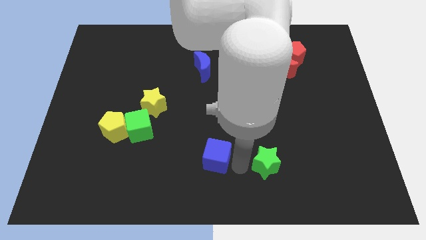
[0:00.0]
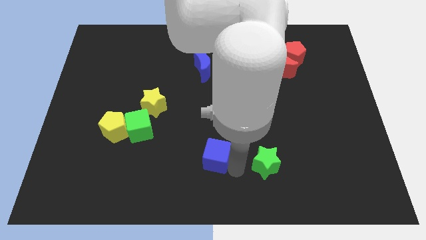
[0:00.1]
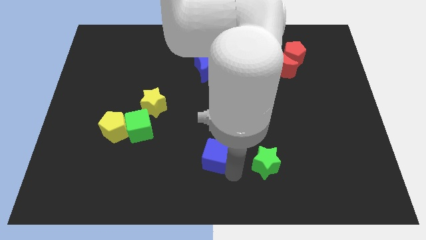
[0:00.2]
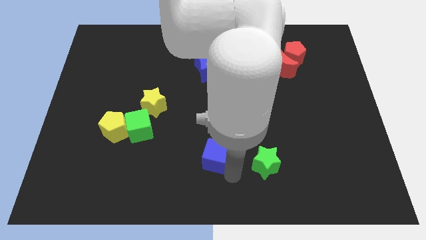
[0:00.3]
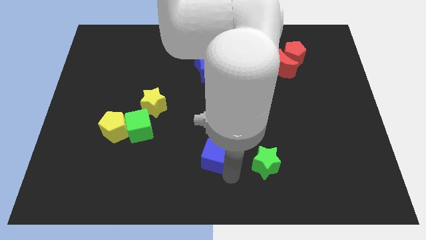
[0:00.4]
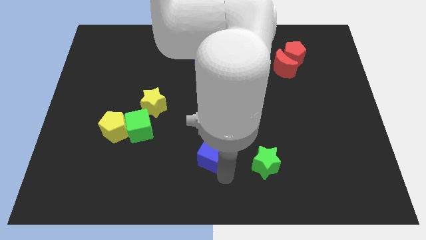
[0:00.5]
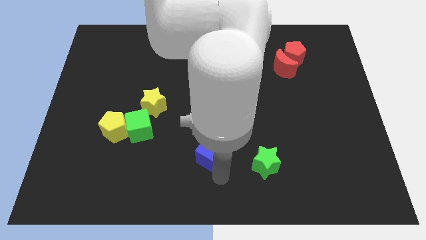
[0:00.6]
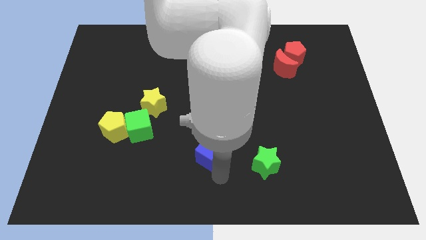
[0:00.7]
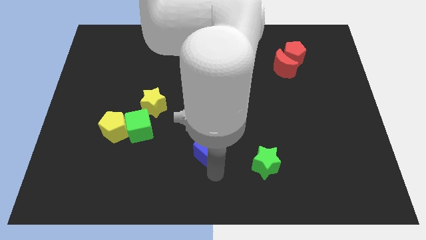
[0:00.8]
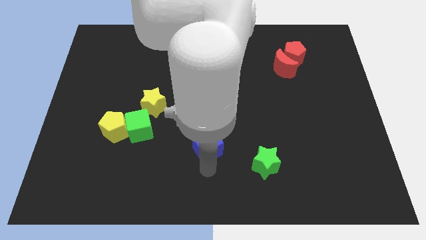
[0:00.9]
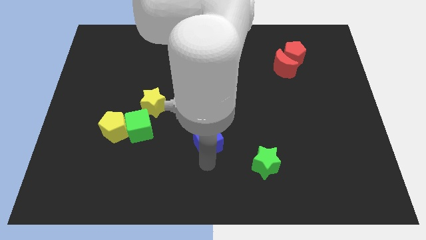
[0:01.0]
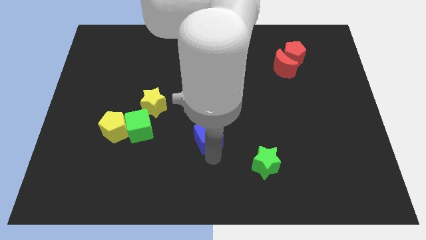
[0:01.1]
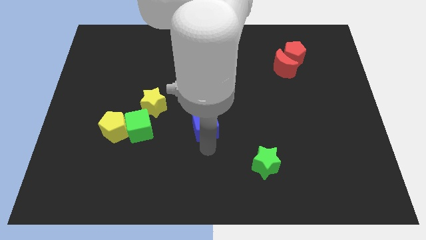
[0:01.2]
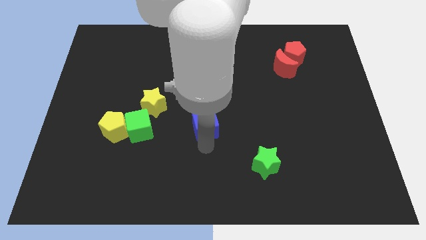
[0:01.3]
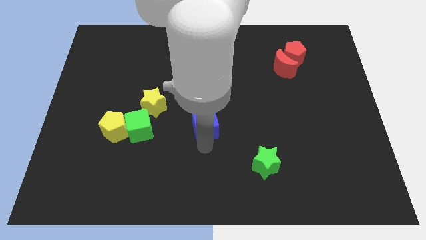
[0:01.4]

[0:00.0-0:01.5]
push blue cube towards center

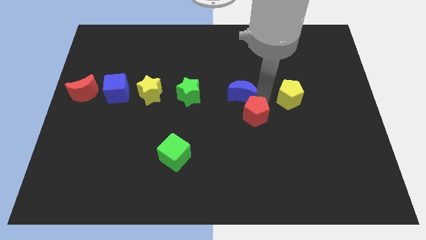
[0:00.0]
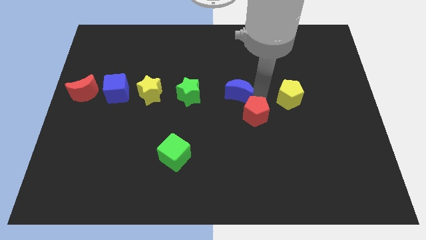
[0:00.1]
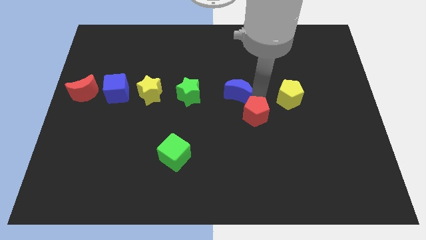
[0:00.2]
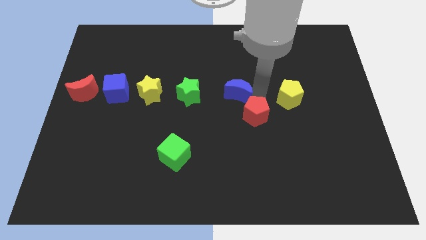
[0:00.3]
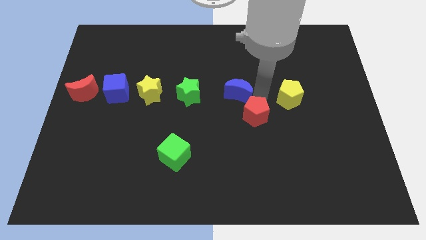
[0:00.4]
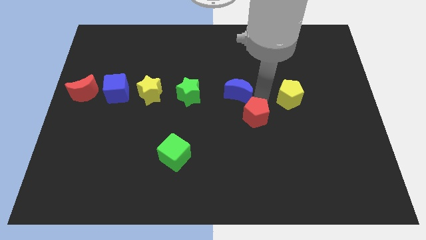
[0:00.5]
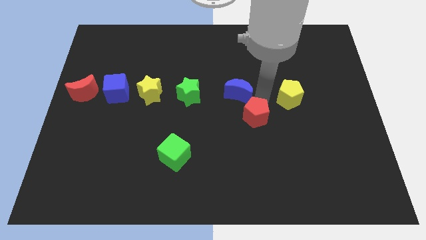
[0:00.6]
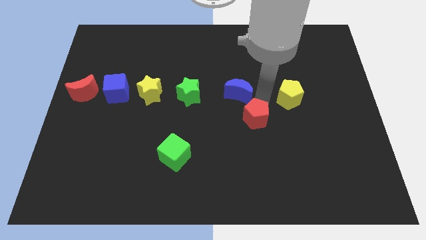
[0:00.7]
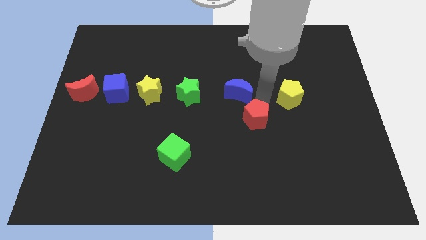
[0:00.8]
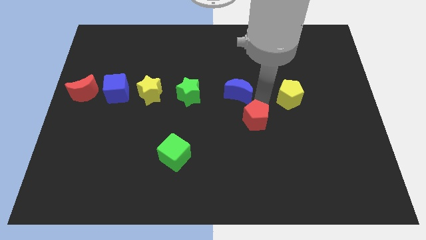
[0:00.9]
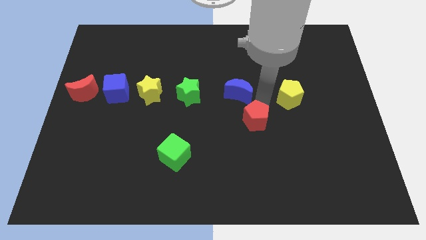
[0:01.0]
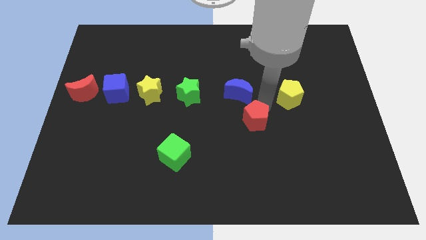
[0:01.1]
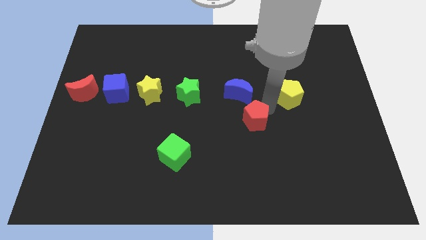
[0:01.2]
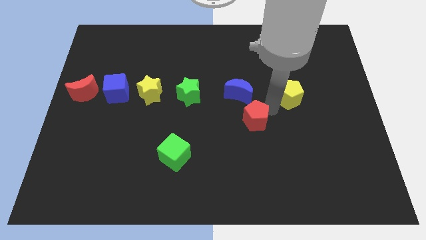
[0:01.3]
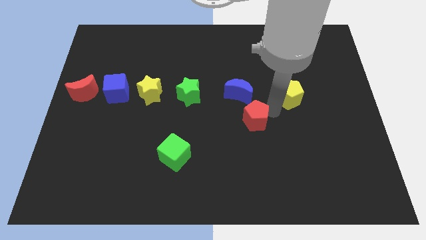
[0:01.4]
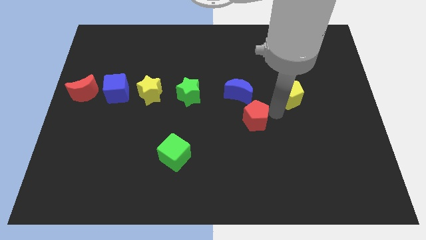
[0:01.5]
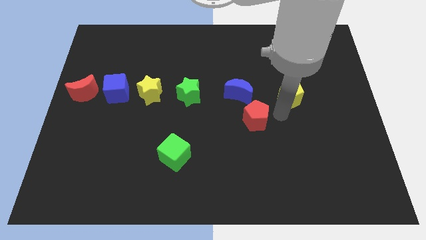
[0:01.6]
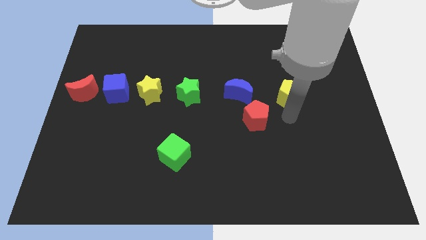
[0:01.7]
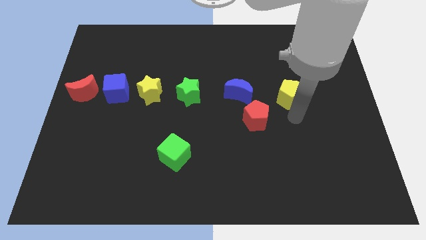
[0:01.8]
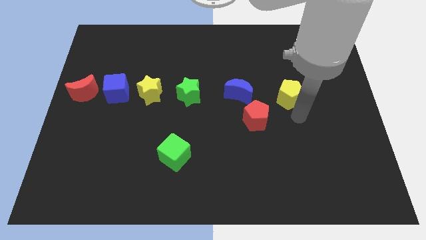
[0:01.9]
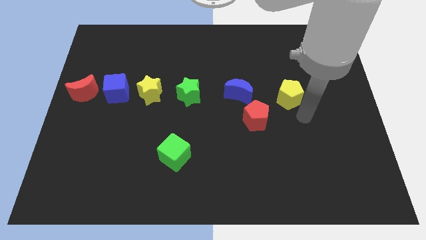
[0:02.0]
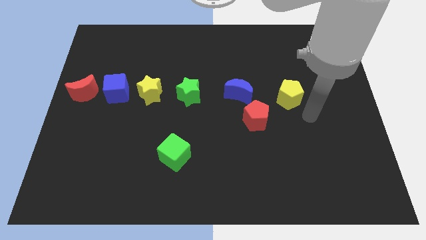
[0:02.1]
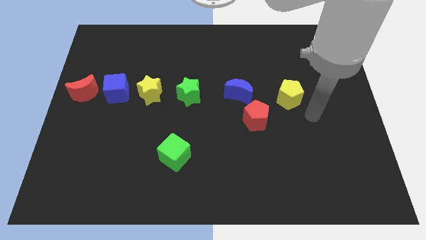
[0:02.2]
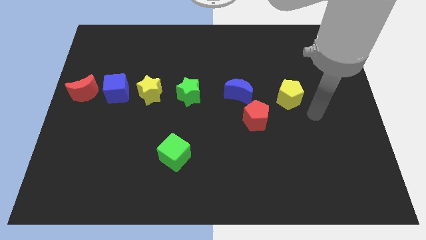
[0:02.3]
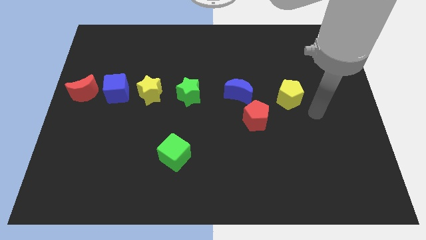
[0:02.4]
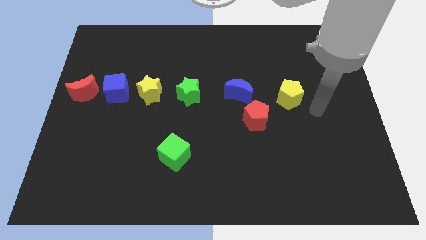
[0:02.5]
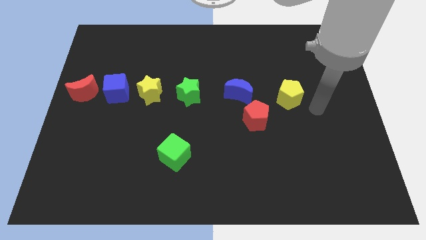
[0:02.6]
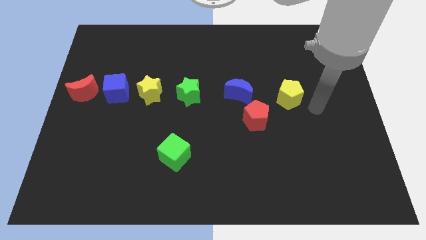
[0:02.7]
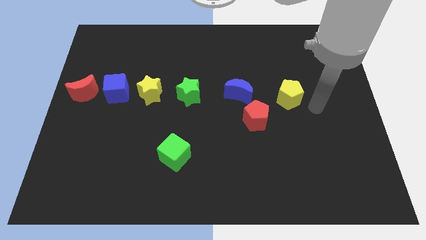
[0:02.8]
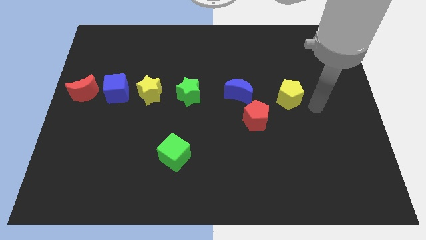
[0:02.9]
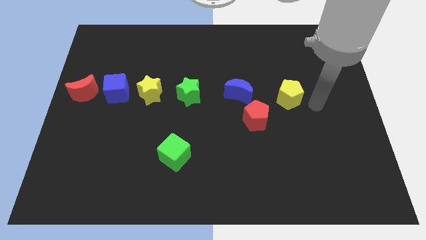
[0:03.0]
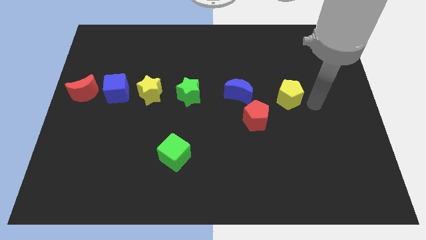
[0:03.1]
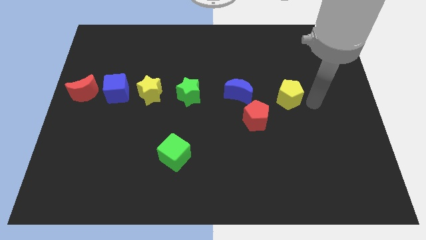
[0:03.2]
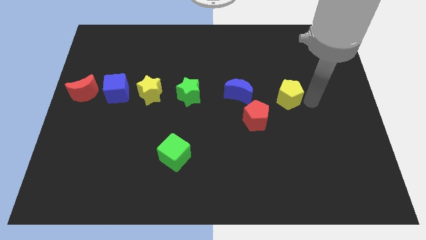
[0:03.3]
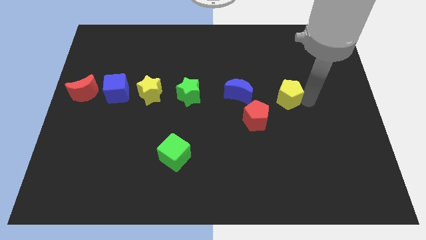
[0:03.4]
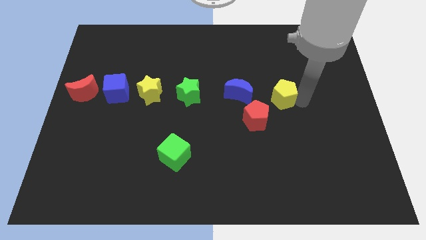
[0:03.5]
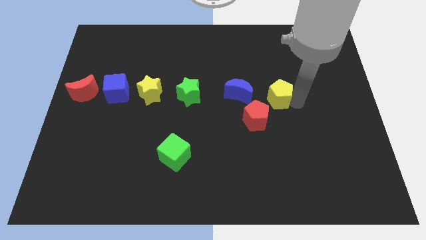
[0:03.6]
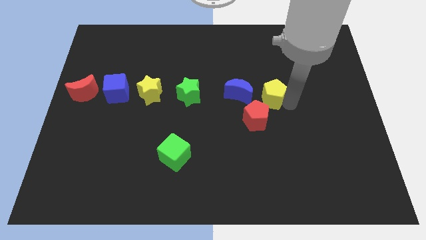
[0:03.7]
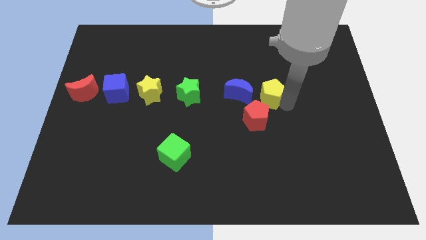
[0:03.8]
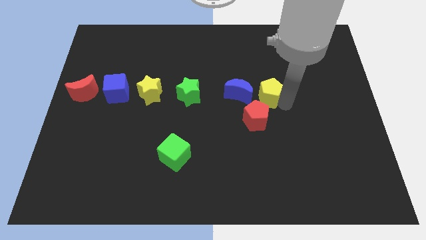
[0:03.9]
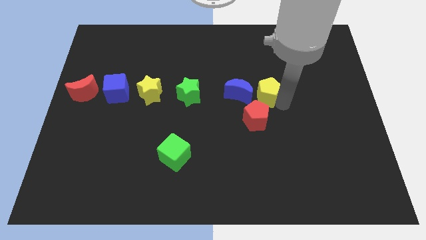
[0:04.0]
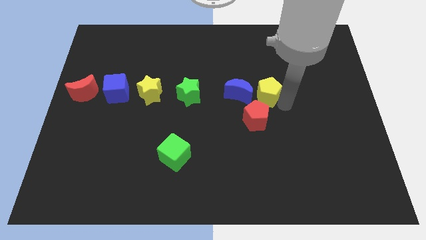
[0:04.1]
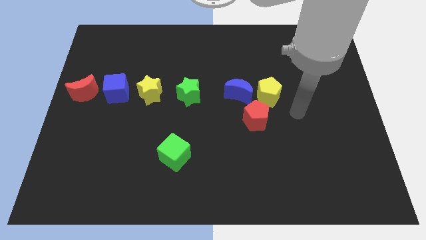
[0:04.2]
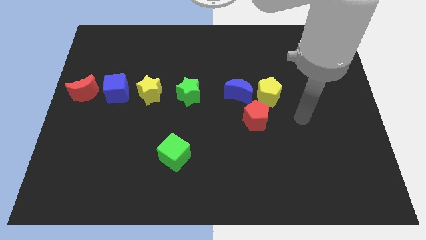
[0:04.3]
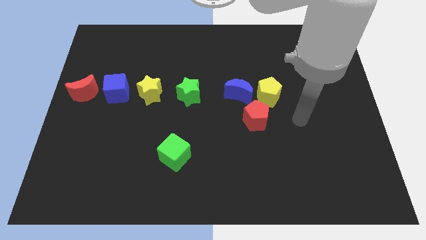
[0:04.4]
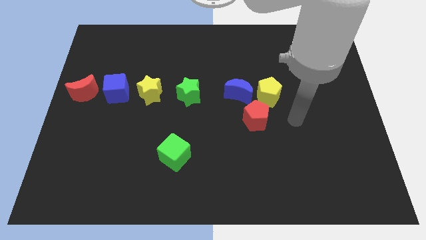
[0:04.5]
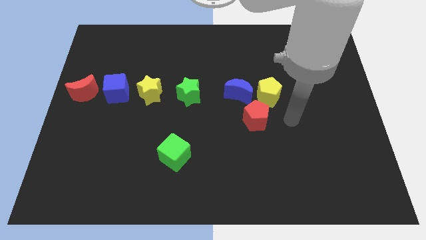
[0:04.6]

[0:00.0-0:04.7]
push the red pentagon and yellow pentagon to the right of blue moon

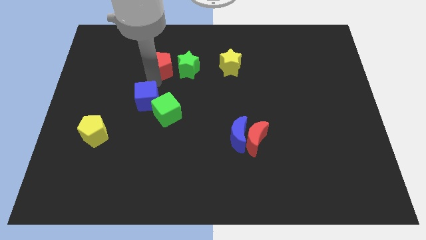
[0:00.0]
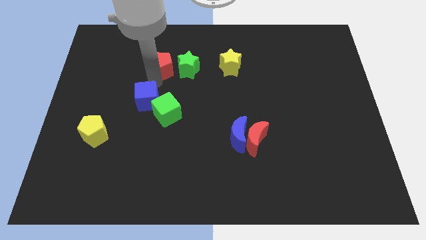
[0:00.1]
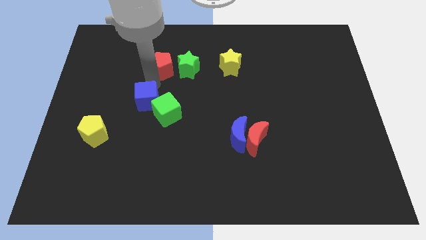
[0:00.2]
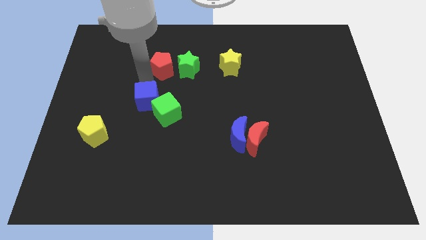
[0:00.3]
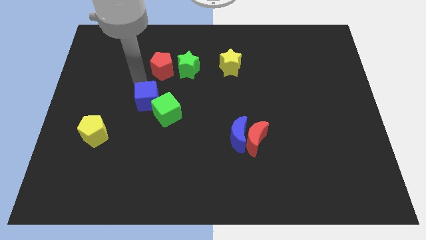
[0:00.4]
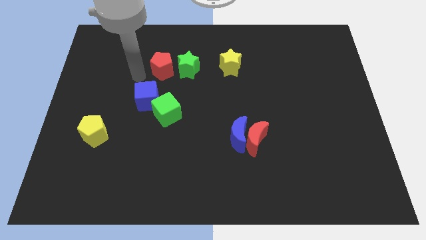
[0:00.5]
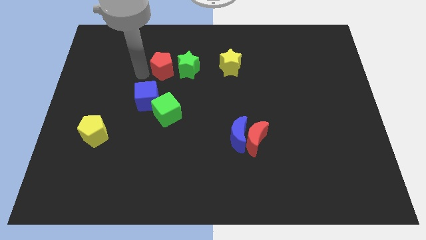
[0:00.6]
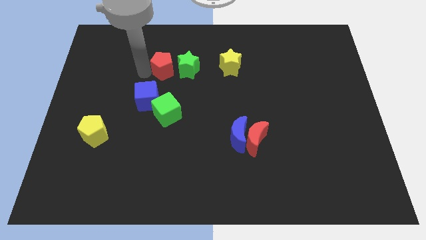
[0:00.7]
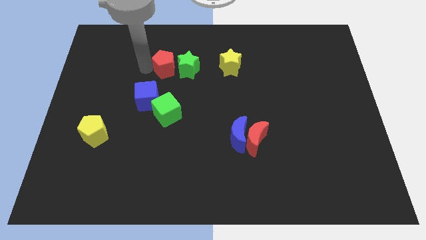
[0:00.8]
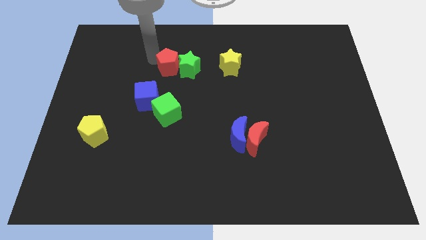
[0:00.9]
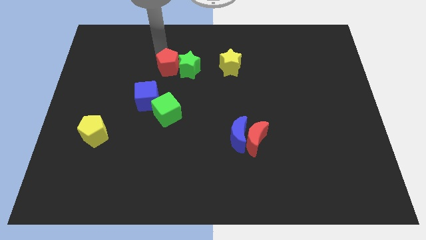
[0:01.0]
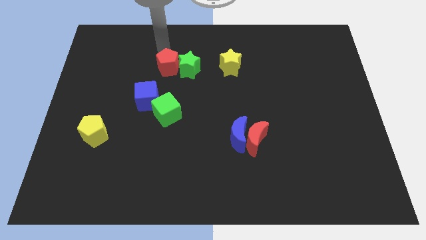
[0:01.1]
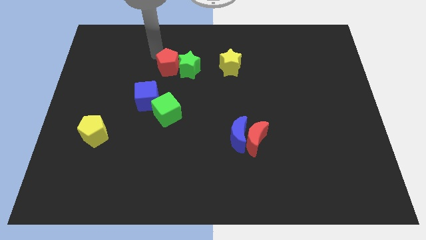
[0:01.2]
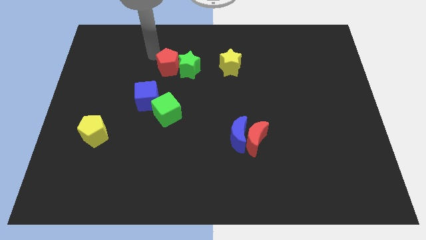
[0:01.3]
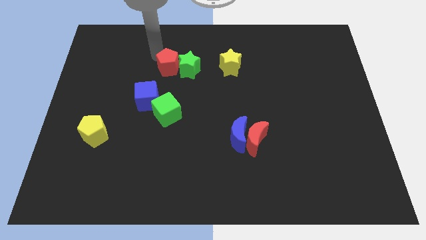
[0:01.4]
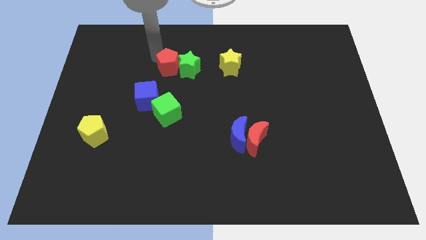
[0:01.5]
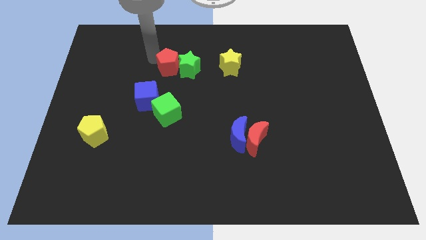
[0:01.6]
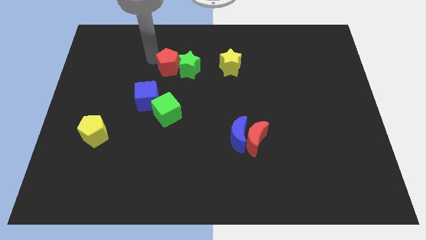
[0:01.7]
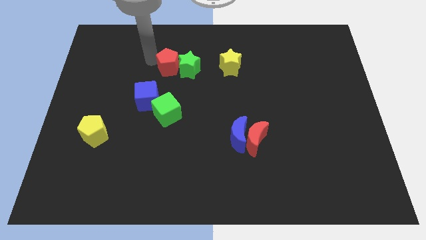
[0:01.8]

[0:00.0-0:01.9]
push red pentagon into green star

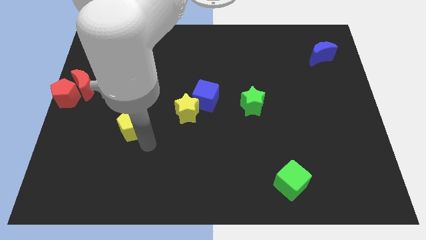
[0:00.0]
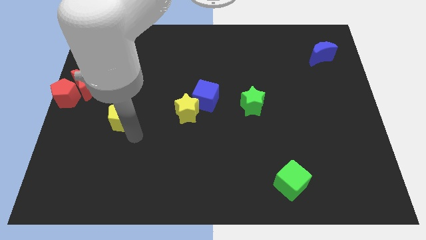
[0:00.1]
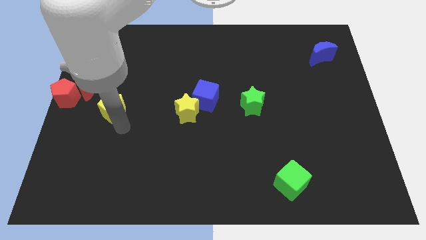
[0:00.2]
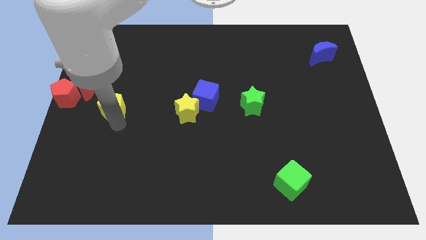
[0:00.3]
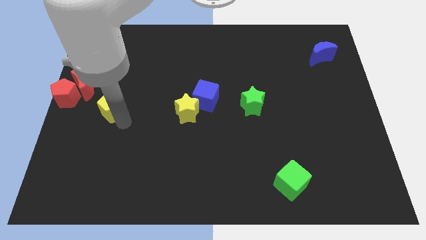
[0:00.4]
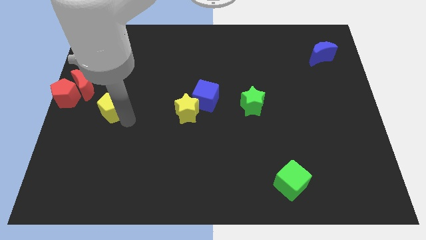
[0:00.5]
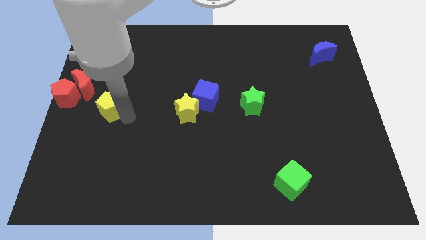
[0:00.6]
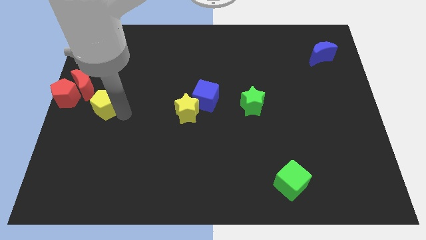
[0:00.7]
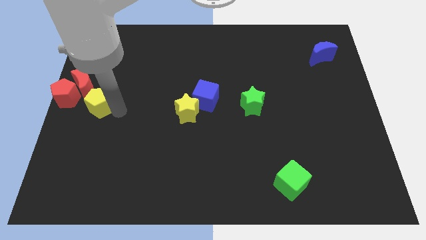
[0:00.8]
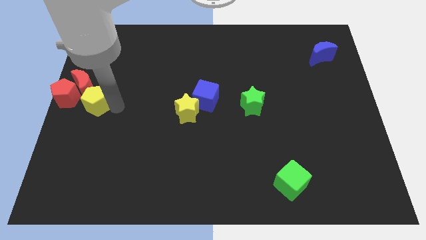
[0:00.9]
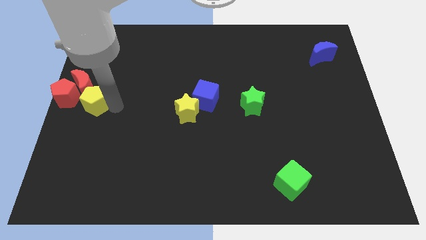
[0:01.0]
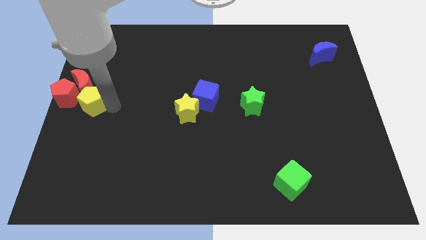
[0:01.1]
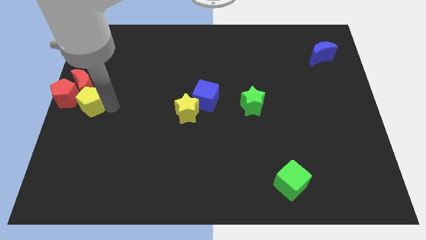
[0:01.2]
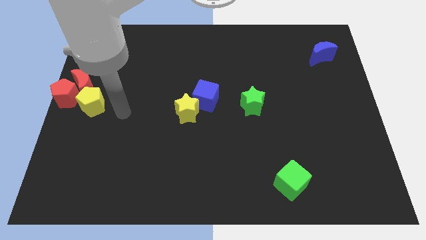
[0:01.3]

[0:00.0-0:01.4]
place the yellow pentagon close to the red crescent
